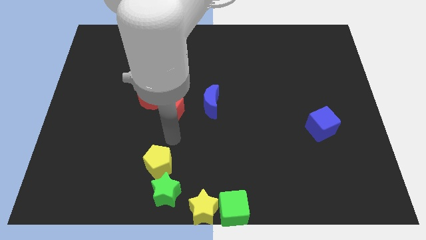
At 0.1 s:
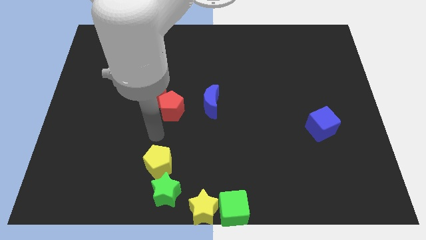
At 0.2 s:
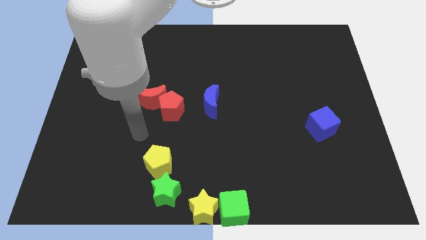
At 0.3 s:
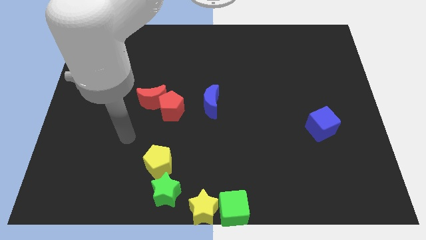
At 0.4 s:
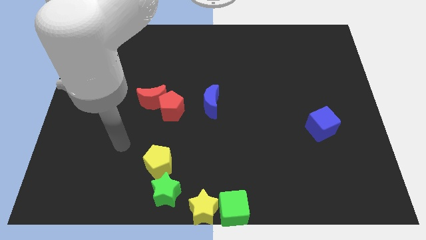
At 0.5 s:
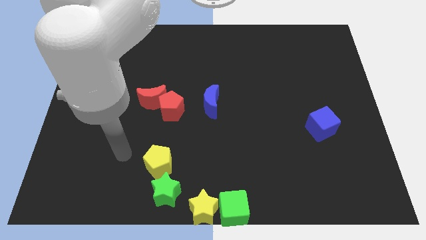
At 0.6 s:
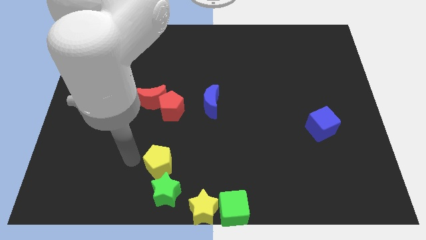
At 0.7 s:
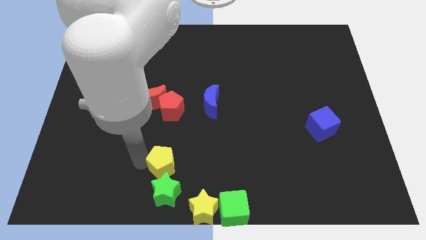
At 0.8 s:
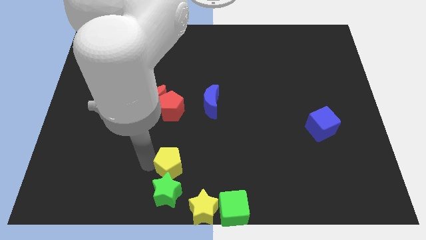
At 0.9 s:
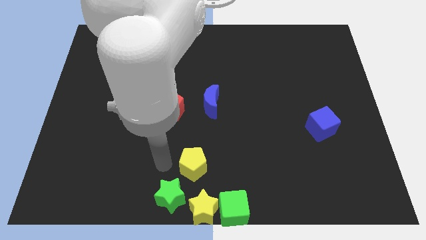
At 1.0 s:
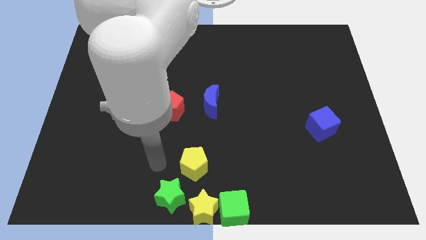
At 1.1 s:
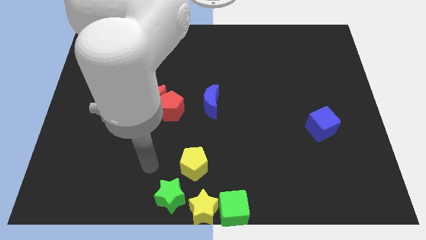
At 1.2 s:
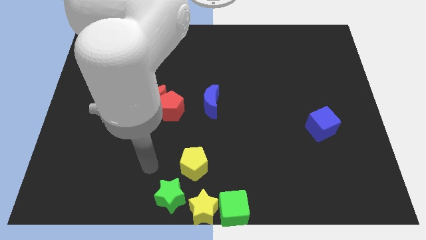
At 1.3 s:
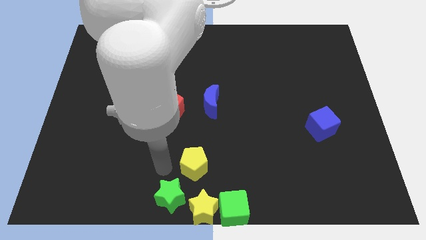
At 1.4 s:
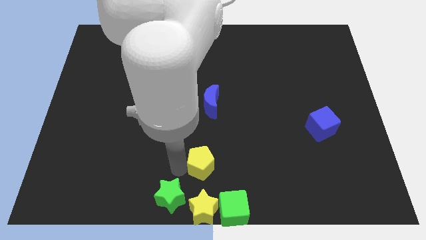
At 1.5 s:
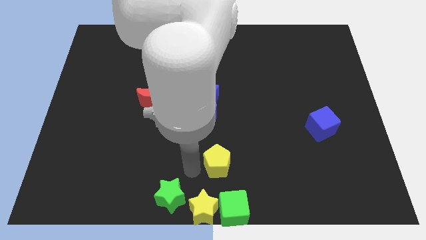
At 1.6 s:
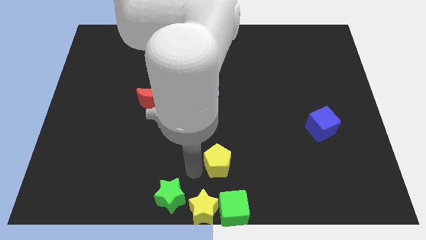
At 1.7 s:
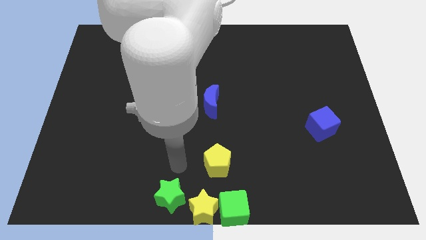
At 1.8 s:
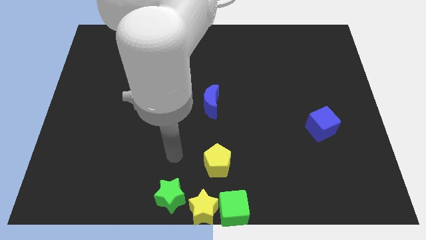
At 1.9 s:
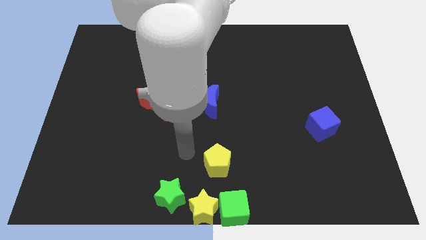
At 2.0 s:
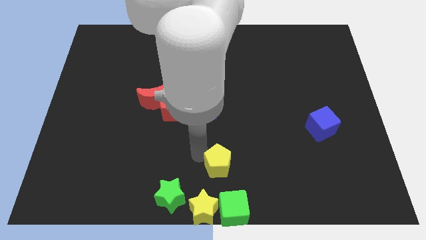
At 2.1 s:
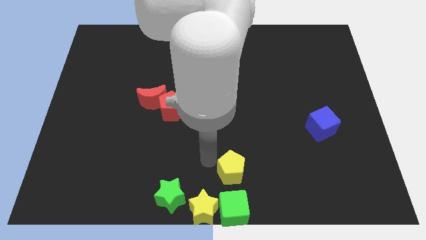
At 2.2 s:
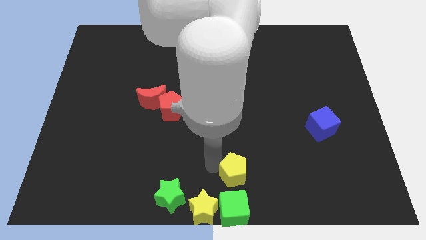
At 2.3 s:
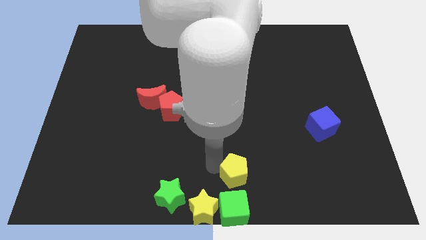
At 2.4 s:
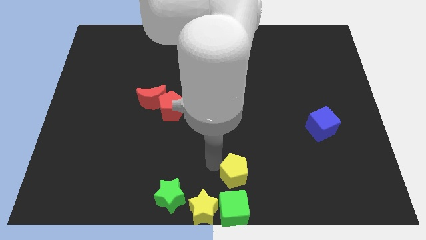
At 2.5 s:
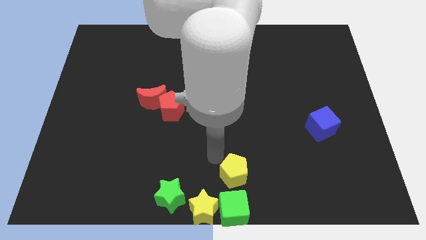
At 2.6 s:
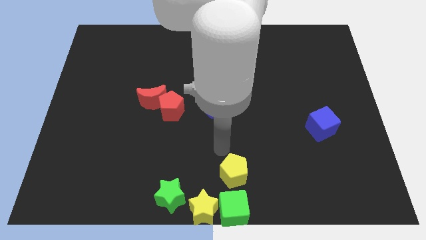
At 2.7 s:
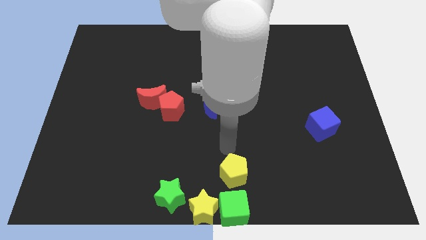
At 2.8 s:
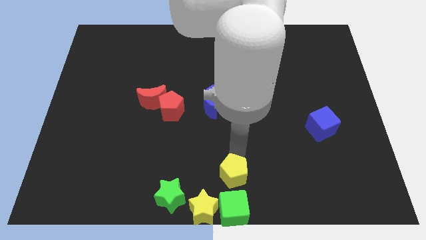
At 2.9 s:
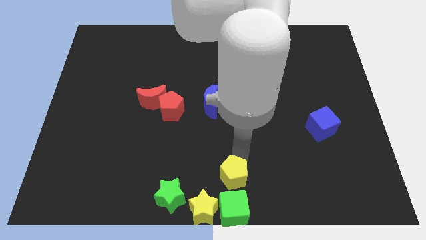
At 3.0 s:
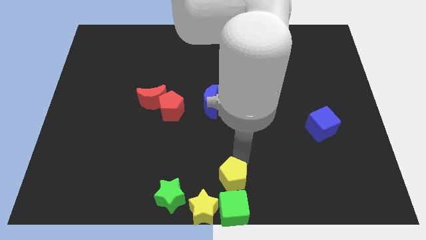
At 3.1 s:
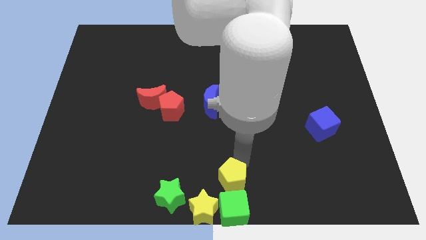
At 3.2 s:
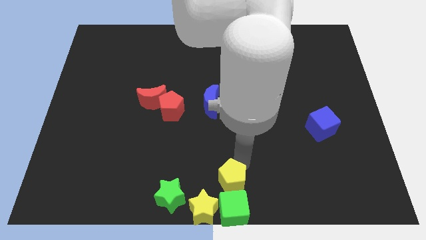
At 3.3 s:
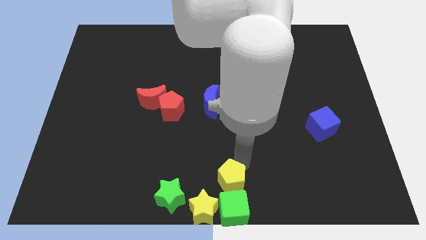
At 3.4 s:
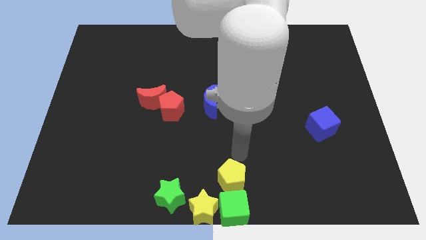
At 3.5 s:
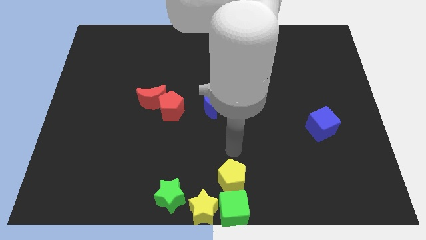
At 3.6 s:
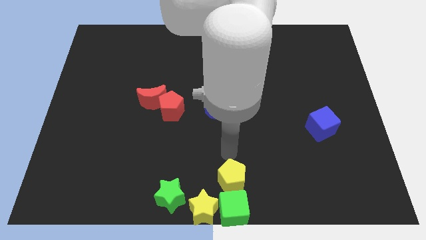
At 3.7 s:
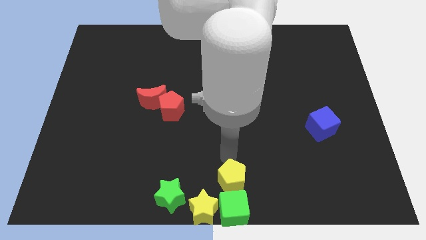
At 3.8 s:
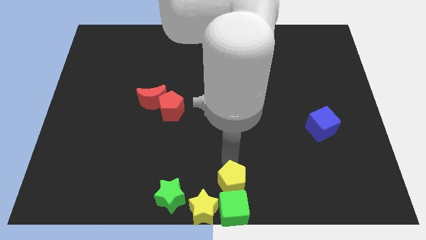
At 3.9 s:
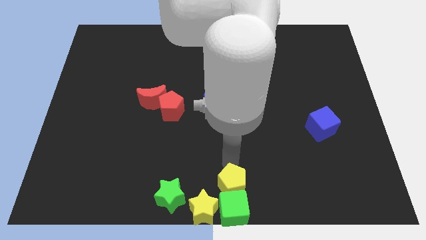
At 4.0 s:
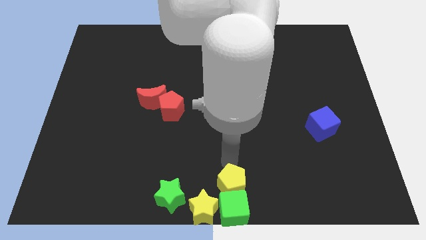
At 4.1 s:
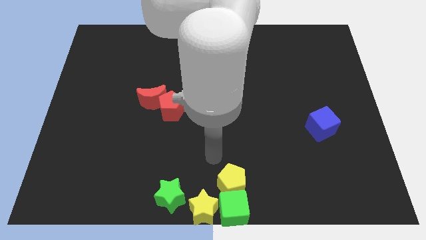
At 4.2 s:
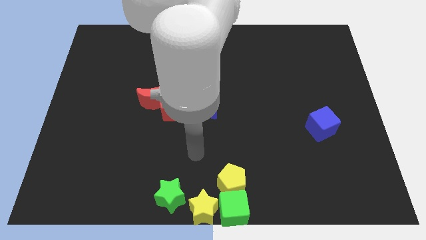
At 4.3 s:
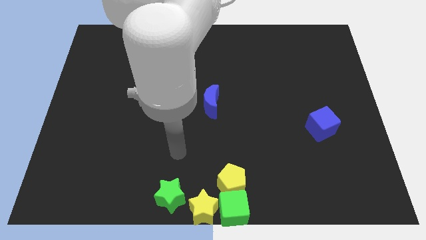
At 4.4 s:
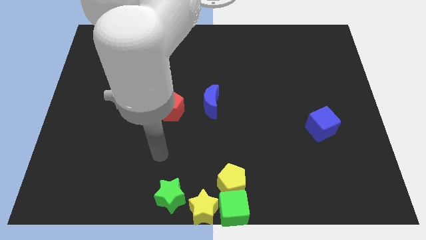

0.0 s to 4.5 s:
place the yellow pentagon above the green cube

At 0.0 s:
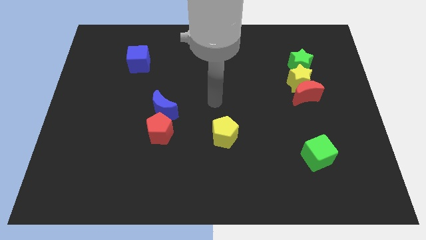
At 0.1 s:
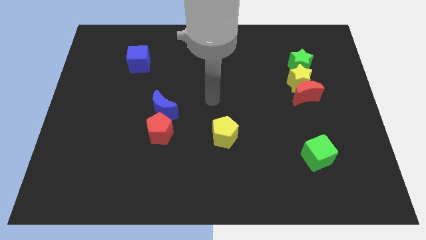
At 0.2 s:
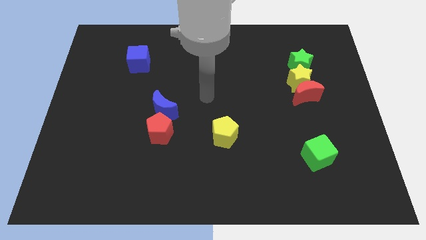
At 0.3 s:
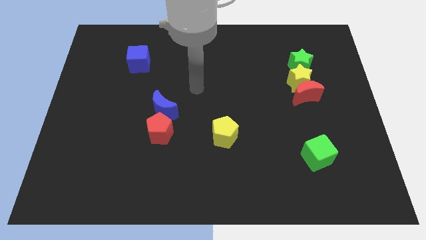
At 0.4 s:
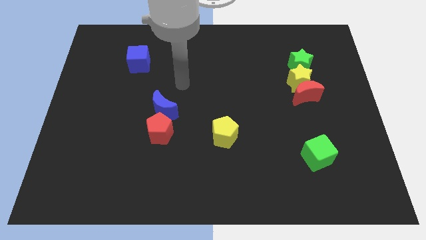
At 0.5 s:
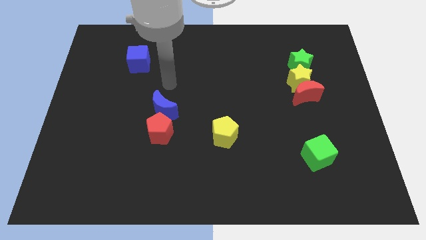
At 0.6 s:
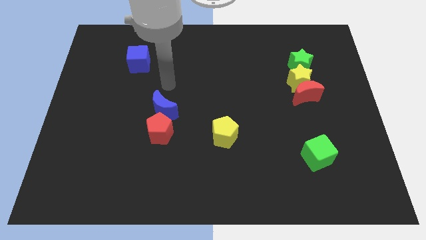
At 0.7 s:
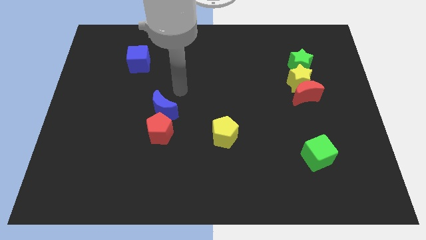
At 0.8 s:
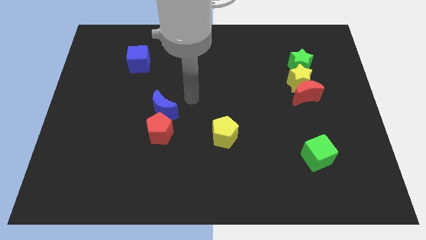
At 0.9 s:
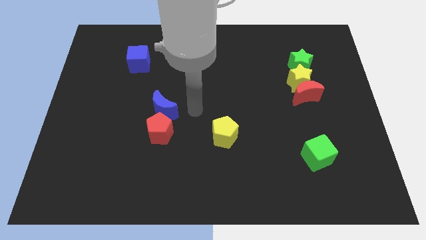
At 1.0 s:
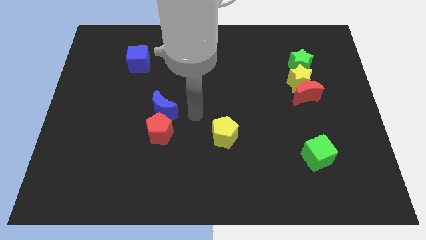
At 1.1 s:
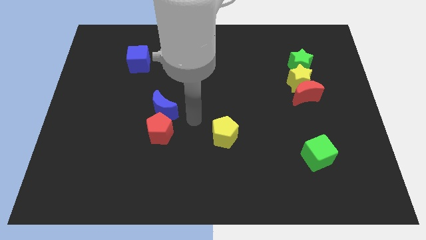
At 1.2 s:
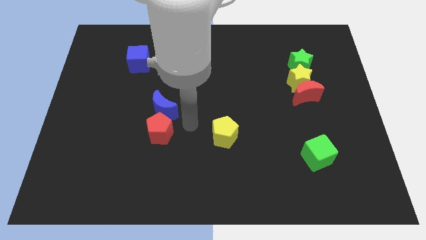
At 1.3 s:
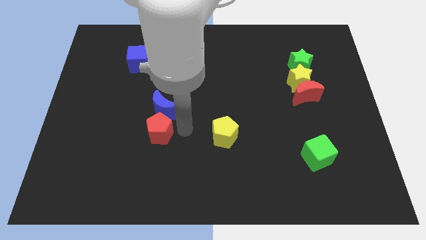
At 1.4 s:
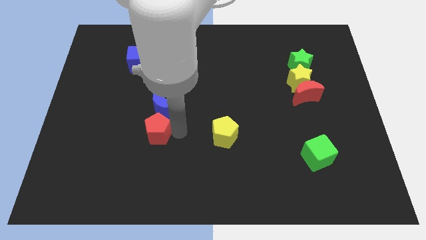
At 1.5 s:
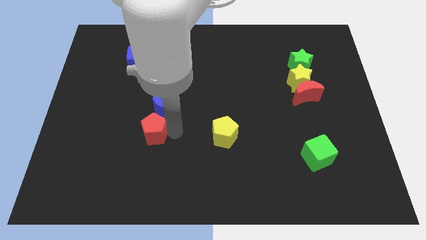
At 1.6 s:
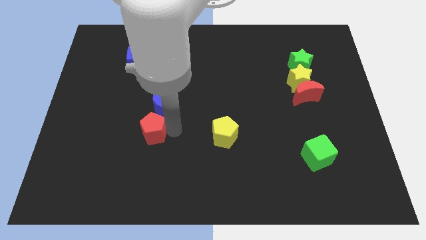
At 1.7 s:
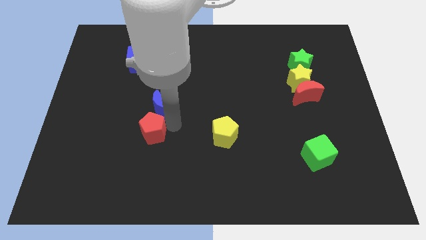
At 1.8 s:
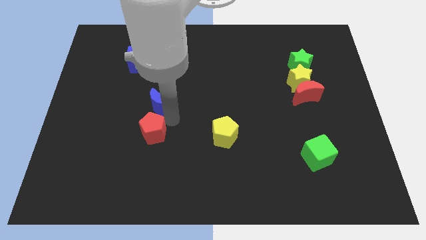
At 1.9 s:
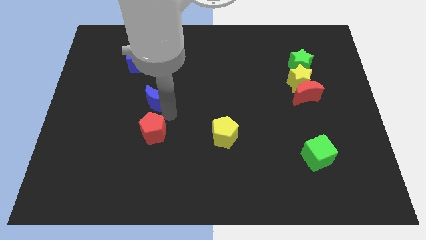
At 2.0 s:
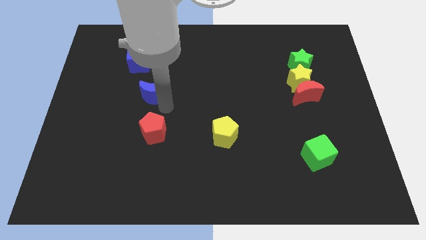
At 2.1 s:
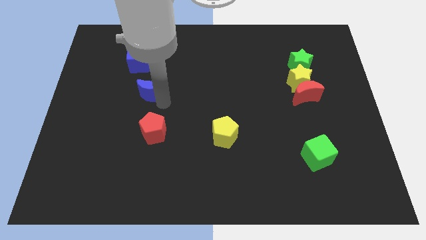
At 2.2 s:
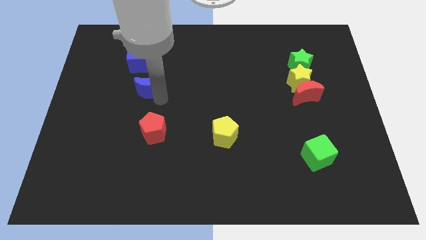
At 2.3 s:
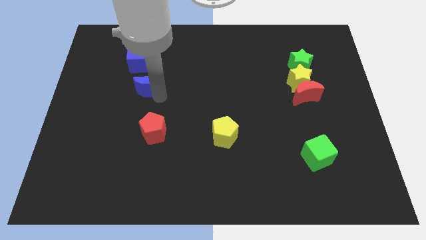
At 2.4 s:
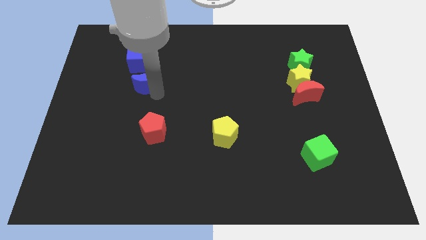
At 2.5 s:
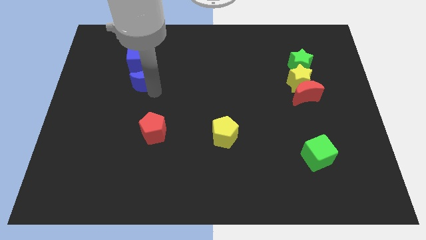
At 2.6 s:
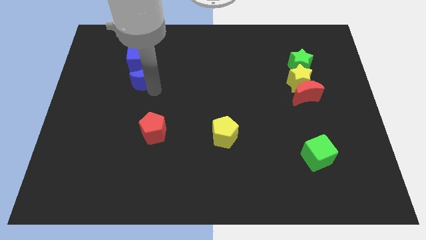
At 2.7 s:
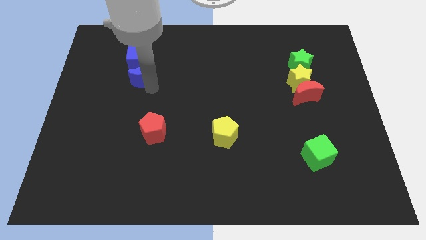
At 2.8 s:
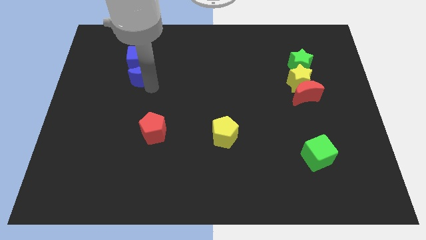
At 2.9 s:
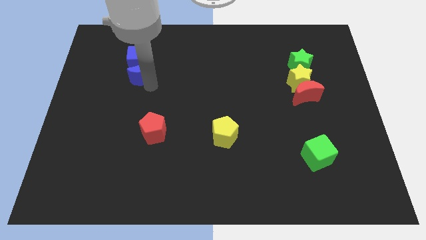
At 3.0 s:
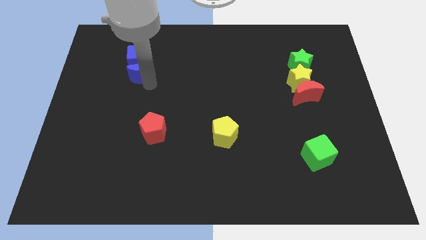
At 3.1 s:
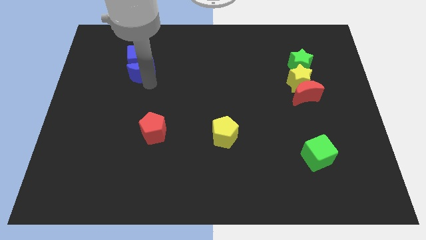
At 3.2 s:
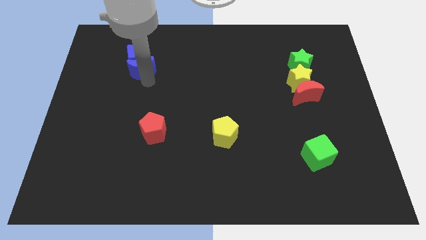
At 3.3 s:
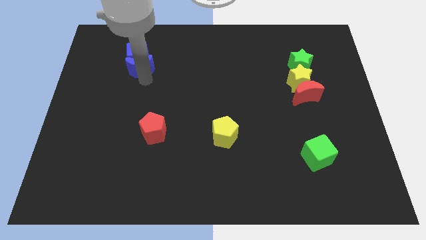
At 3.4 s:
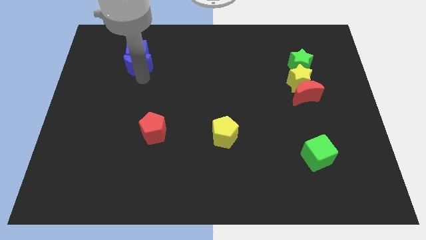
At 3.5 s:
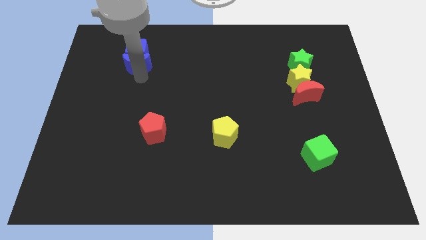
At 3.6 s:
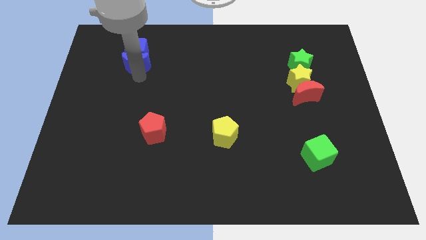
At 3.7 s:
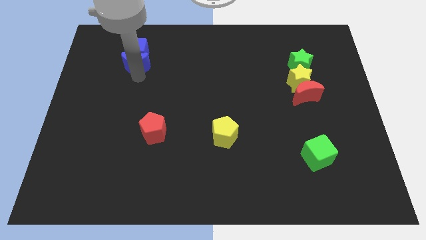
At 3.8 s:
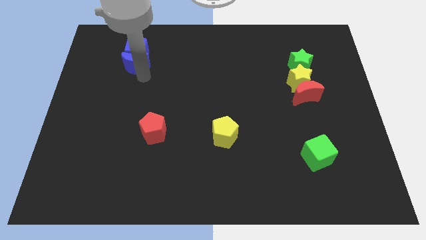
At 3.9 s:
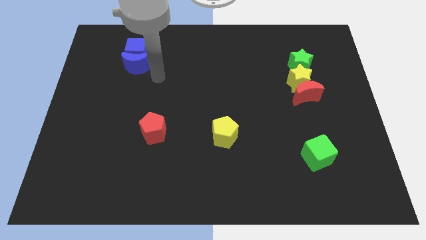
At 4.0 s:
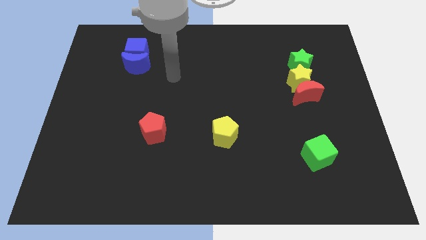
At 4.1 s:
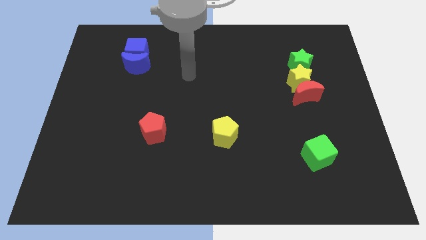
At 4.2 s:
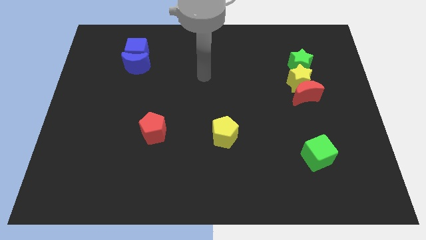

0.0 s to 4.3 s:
place the blue crescent below the blue cube

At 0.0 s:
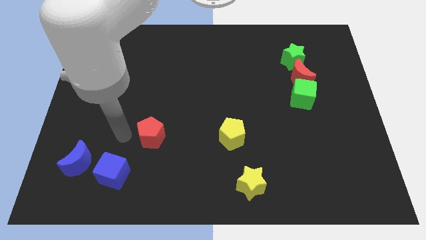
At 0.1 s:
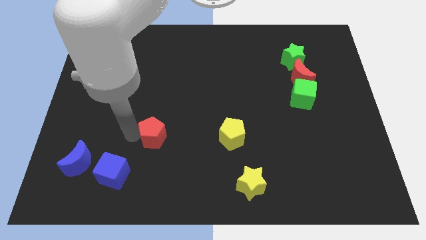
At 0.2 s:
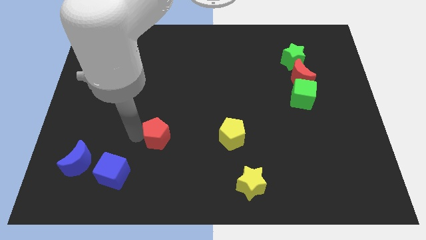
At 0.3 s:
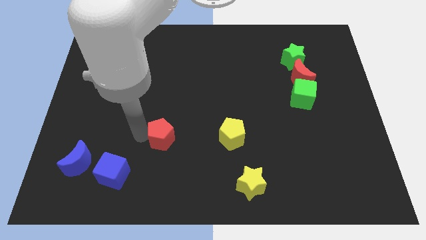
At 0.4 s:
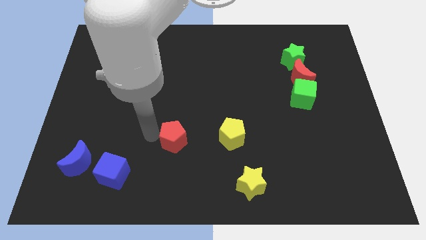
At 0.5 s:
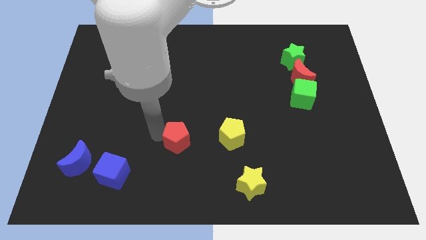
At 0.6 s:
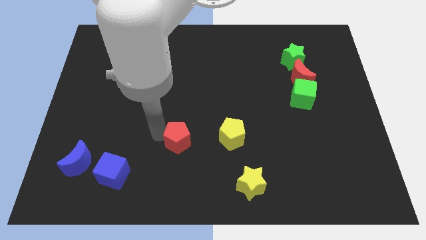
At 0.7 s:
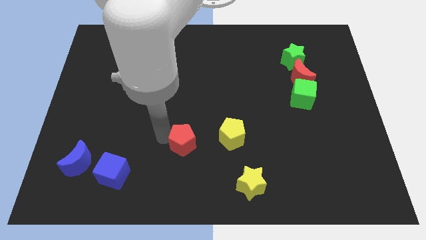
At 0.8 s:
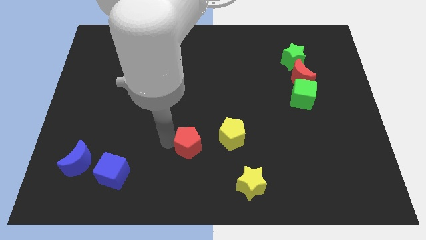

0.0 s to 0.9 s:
place the red pentagon left to the yellow pentagon
